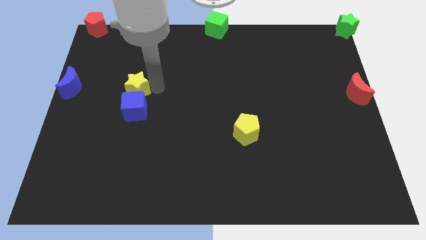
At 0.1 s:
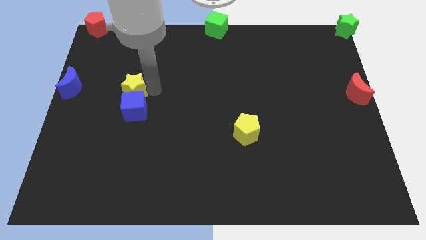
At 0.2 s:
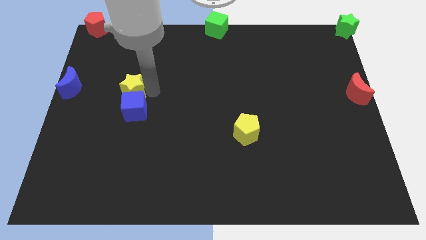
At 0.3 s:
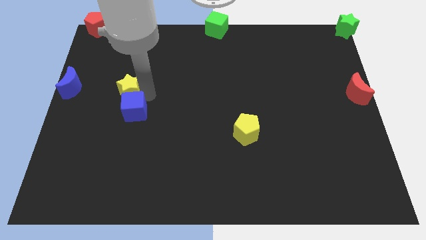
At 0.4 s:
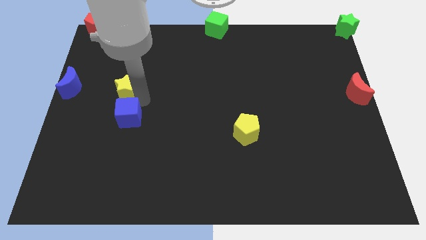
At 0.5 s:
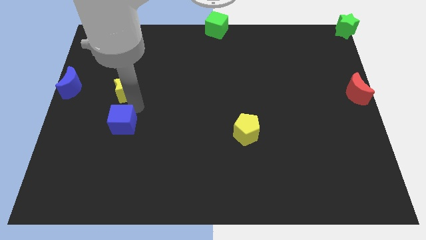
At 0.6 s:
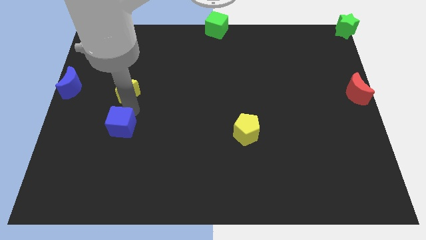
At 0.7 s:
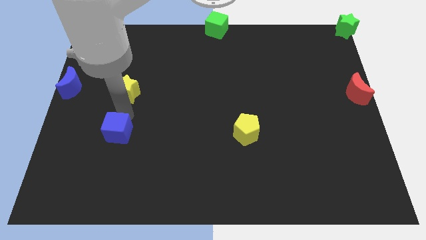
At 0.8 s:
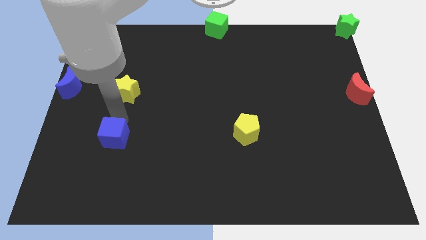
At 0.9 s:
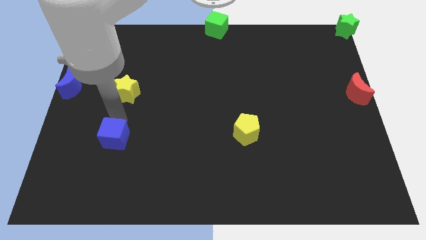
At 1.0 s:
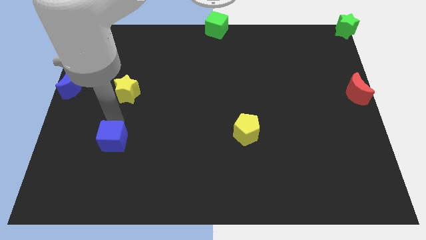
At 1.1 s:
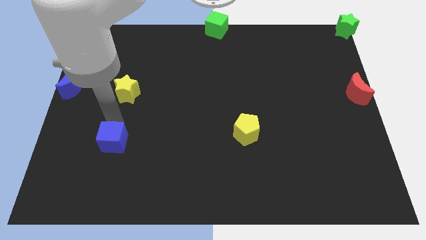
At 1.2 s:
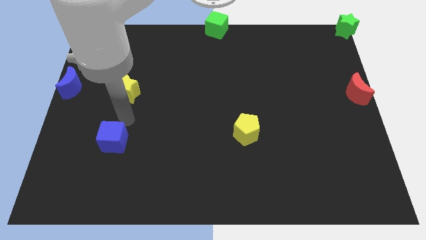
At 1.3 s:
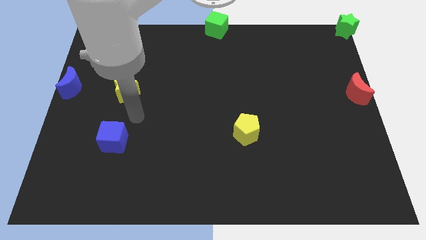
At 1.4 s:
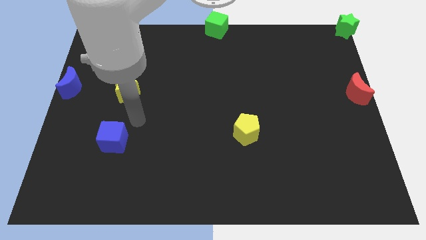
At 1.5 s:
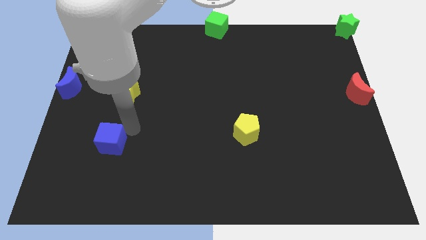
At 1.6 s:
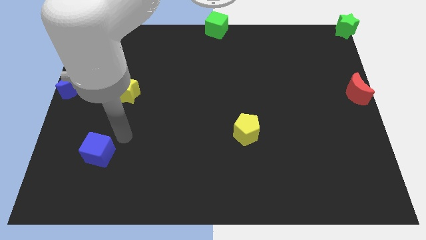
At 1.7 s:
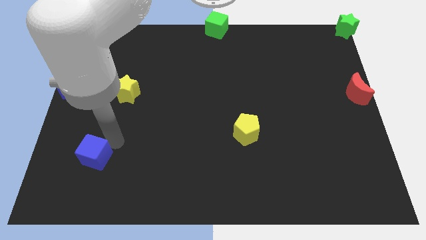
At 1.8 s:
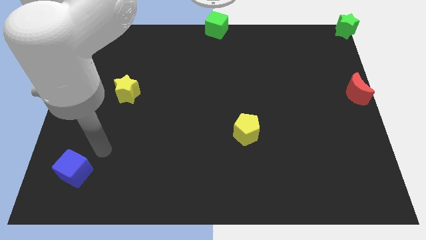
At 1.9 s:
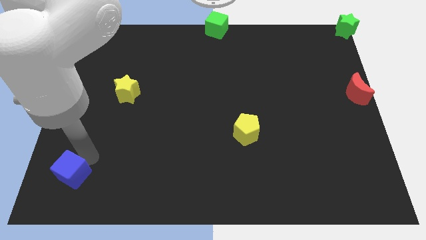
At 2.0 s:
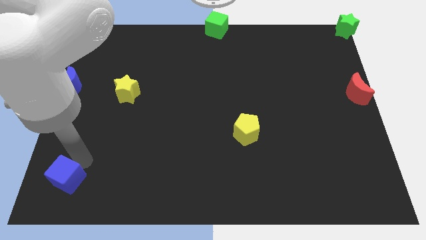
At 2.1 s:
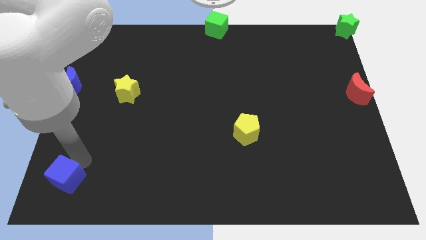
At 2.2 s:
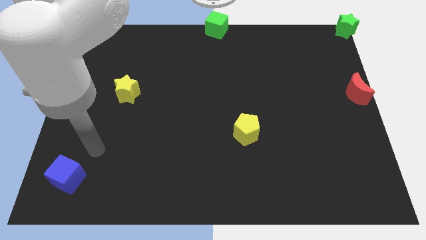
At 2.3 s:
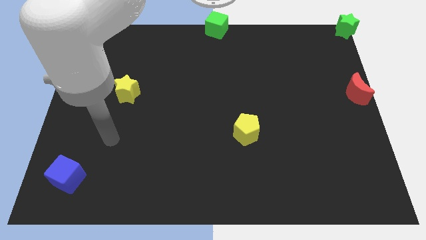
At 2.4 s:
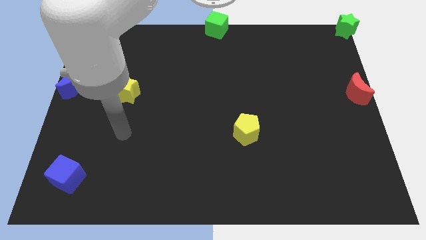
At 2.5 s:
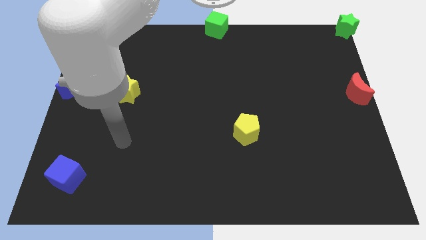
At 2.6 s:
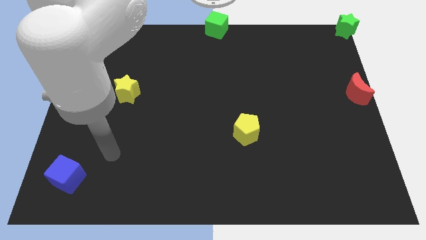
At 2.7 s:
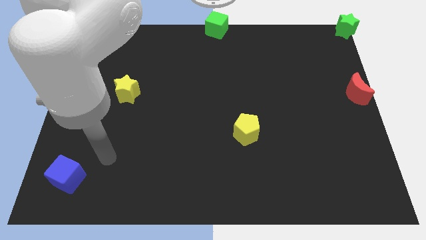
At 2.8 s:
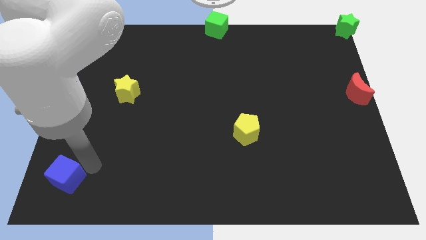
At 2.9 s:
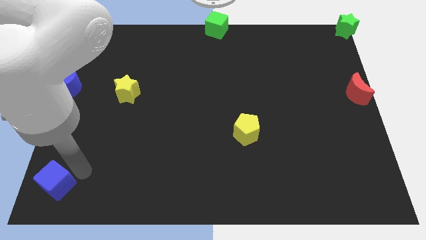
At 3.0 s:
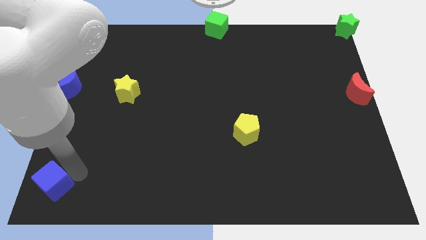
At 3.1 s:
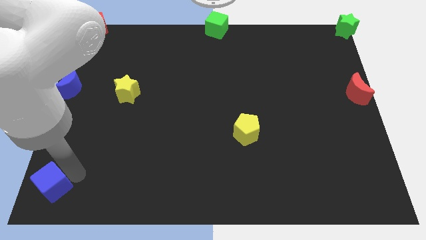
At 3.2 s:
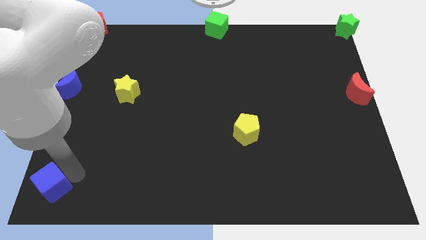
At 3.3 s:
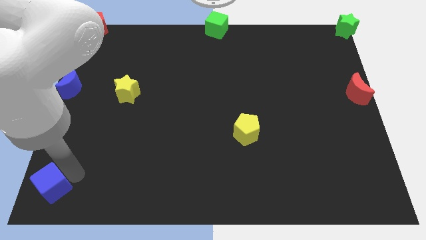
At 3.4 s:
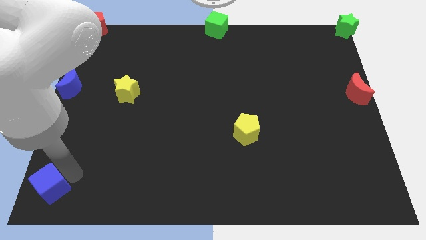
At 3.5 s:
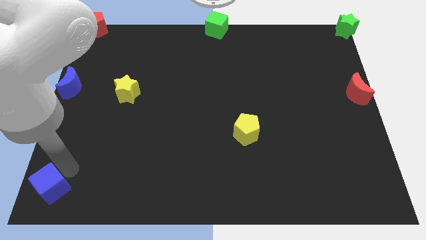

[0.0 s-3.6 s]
separate the yellow star from the blue cube

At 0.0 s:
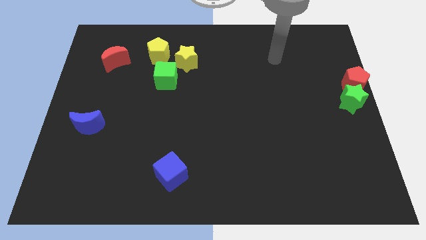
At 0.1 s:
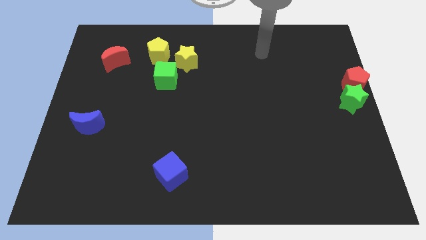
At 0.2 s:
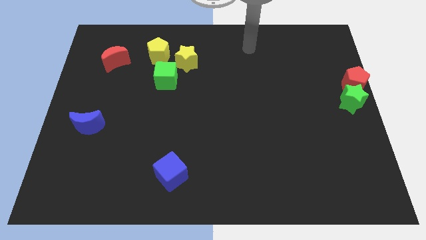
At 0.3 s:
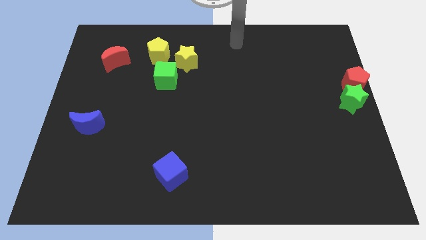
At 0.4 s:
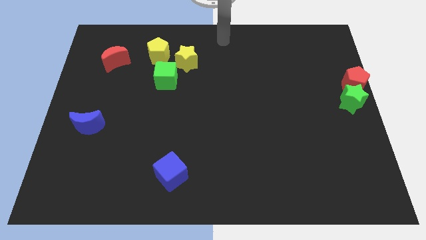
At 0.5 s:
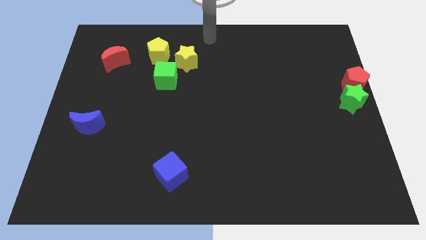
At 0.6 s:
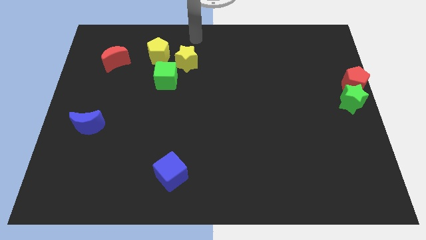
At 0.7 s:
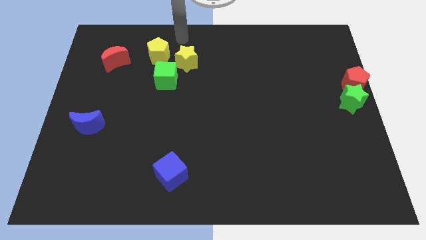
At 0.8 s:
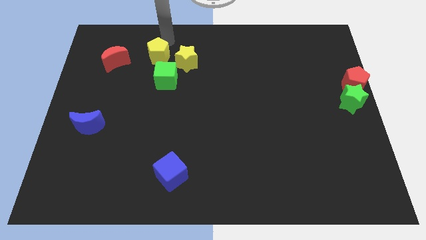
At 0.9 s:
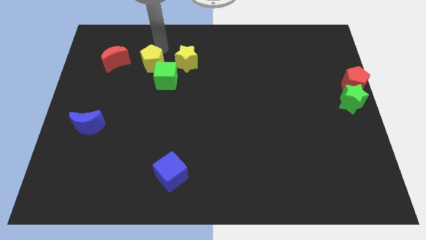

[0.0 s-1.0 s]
push the yellow pentagon into the green cube

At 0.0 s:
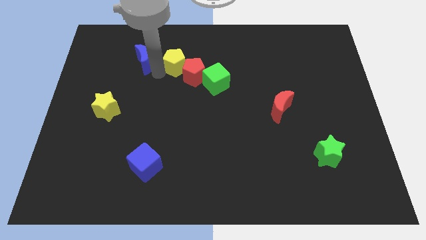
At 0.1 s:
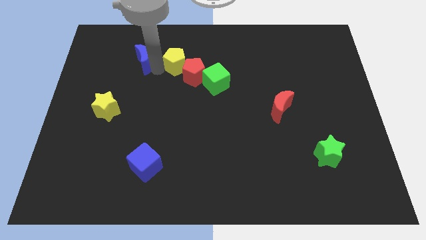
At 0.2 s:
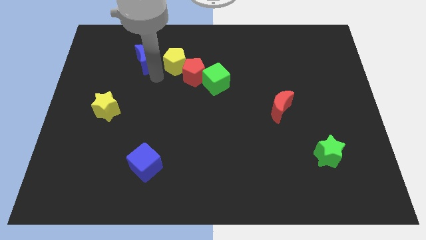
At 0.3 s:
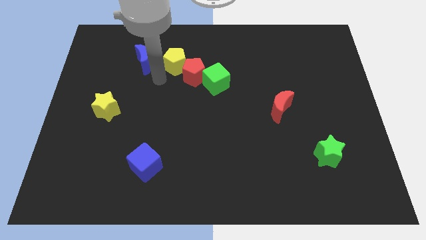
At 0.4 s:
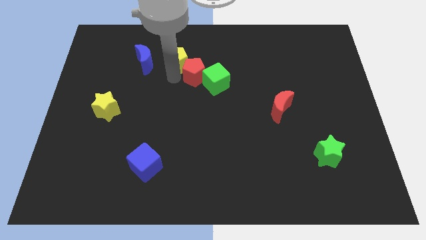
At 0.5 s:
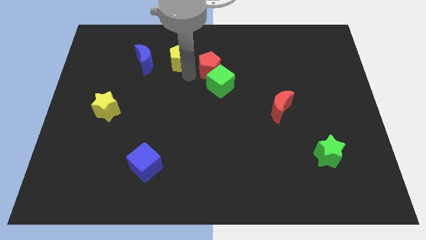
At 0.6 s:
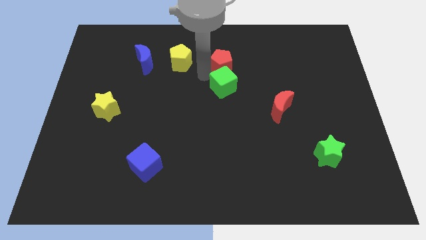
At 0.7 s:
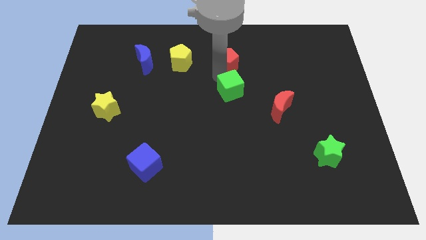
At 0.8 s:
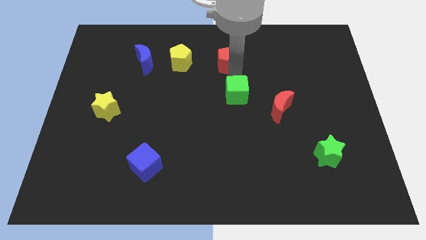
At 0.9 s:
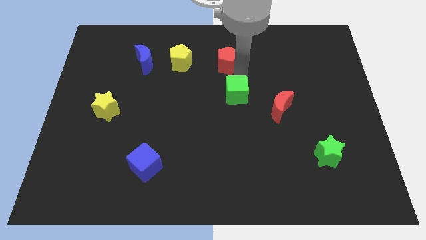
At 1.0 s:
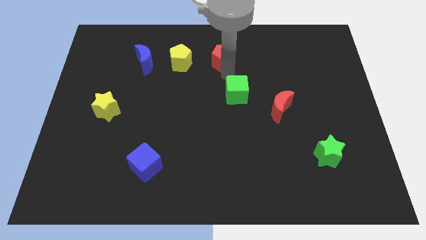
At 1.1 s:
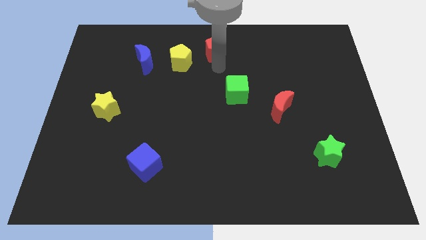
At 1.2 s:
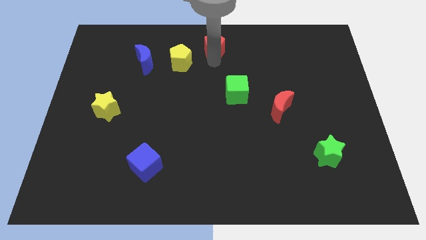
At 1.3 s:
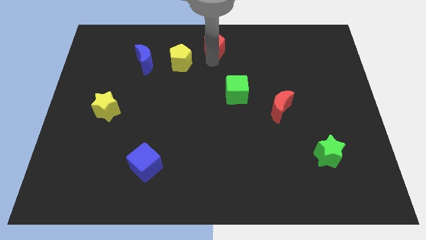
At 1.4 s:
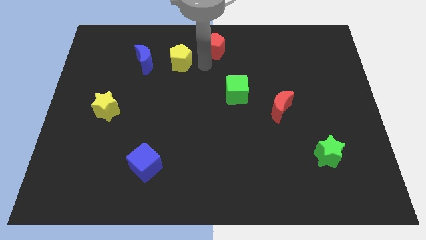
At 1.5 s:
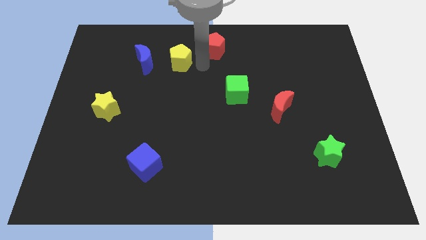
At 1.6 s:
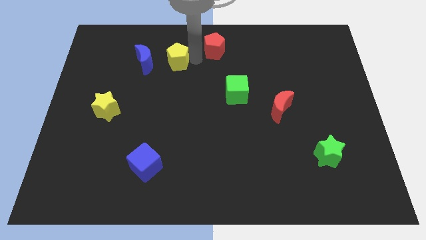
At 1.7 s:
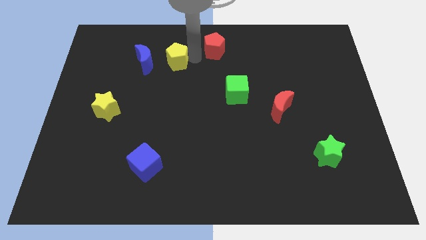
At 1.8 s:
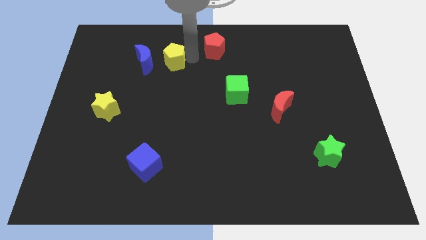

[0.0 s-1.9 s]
separate the red pentagongreen cube and yellow pentagon

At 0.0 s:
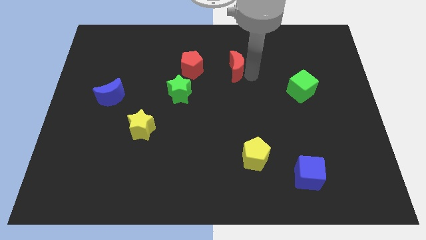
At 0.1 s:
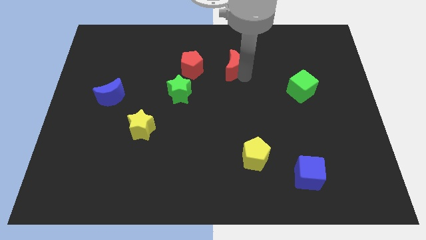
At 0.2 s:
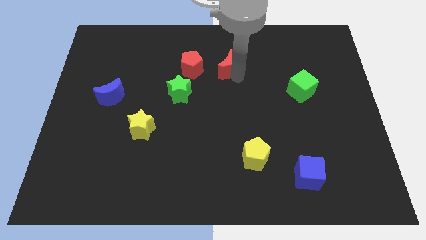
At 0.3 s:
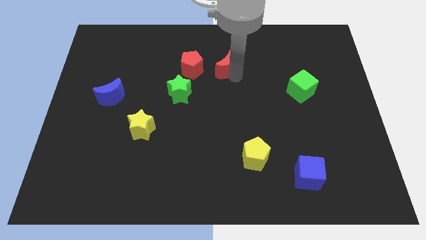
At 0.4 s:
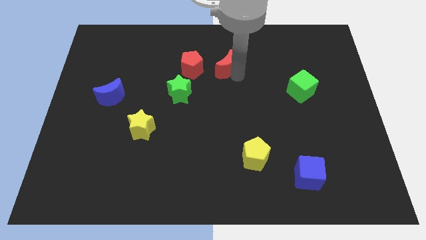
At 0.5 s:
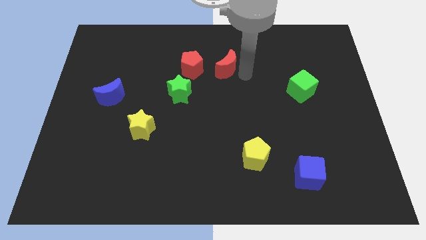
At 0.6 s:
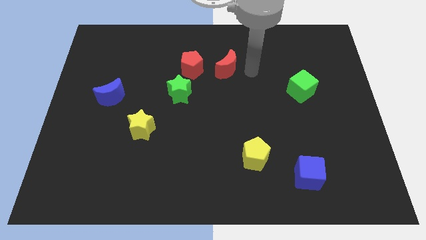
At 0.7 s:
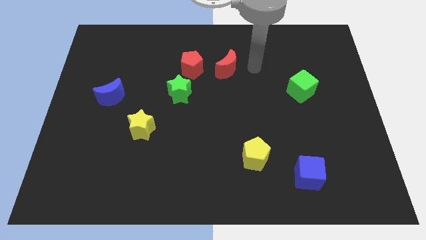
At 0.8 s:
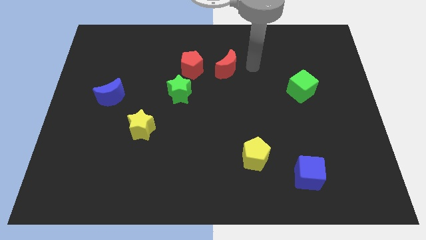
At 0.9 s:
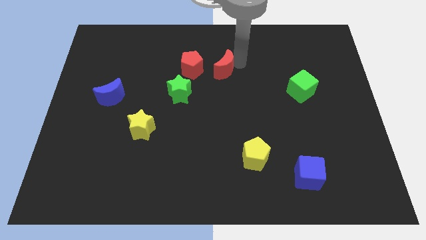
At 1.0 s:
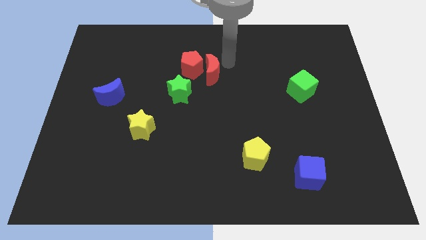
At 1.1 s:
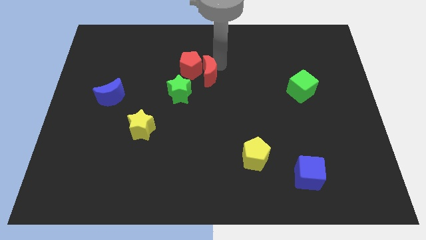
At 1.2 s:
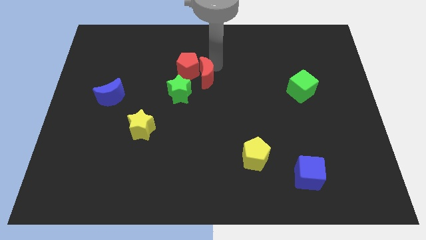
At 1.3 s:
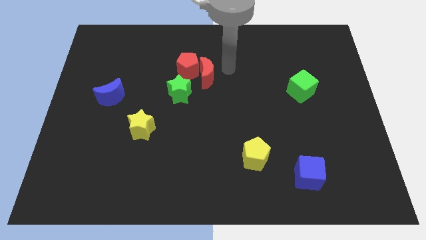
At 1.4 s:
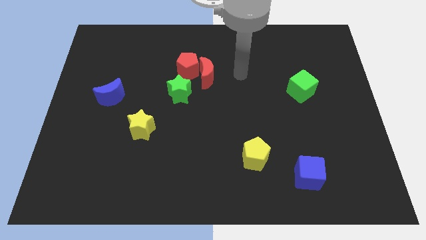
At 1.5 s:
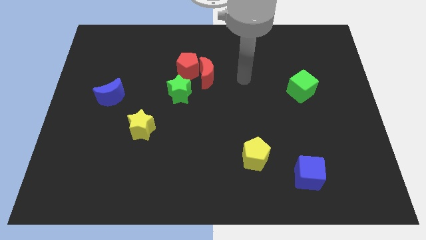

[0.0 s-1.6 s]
push red crescent into red pentagon

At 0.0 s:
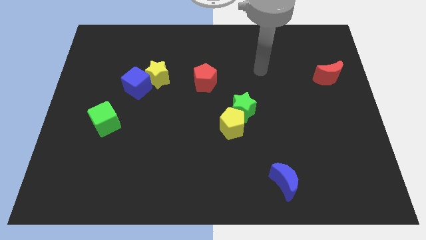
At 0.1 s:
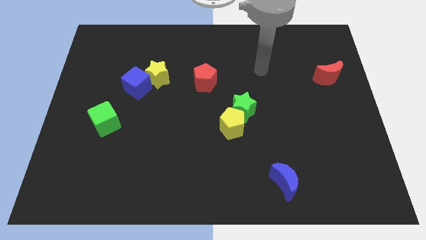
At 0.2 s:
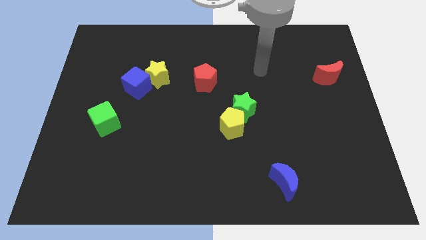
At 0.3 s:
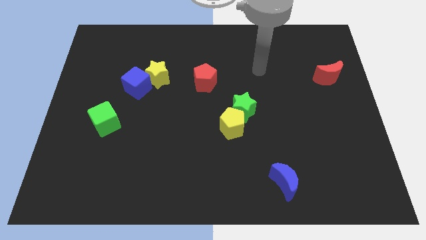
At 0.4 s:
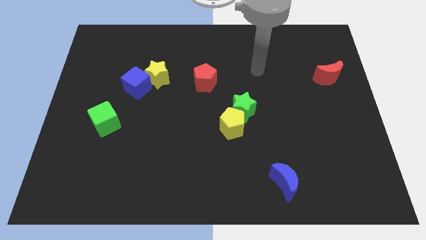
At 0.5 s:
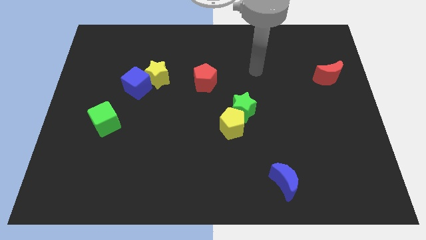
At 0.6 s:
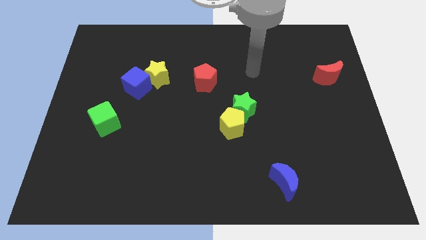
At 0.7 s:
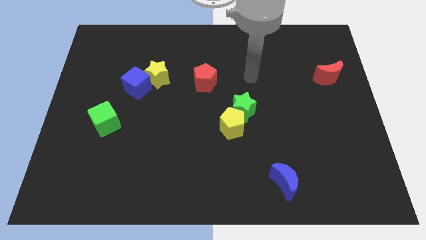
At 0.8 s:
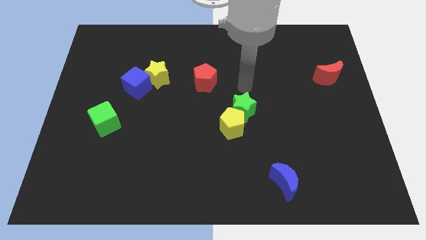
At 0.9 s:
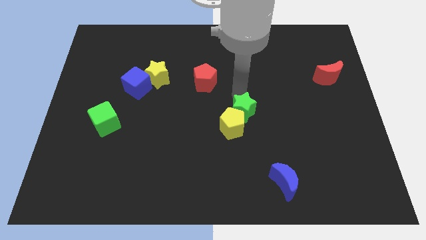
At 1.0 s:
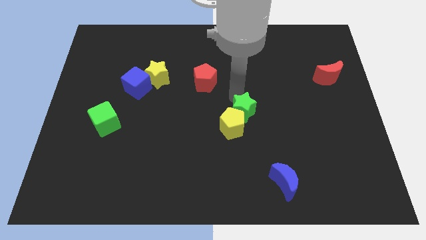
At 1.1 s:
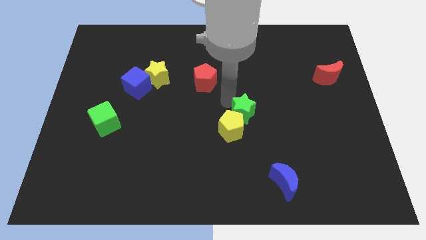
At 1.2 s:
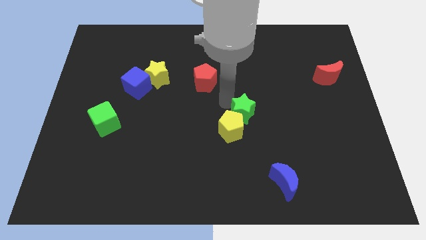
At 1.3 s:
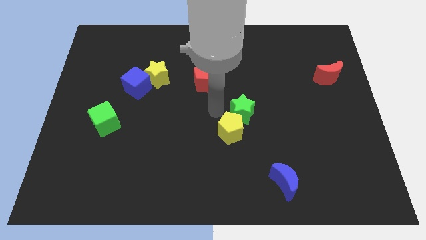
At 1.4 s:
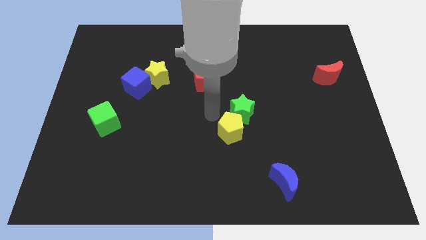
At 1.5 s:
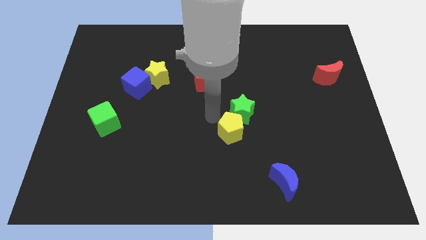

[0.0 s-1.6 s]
slightly push the green star and yellow pentagon towards the bottom side of the board
